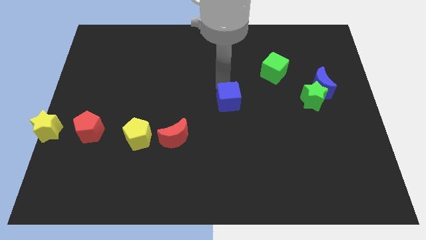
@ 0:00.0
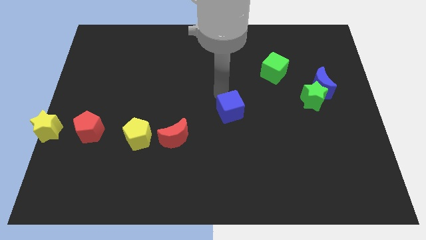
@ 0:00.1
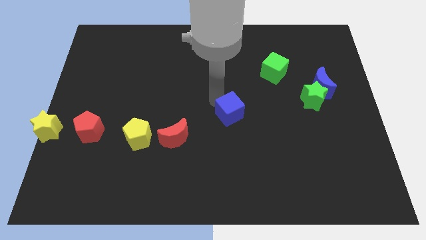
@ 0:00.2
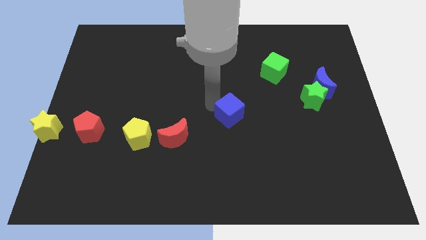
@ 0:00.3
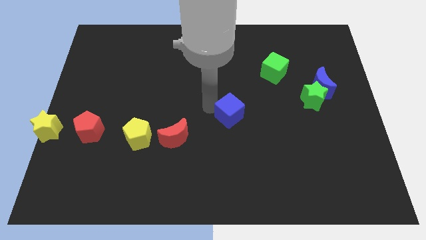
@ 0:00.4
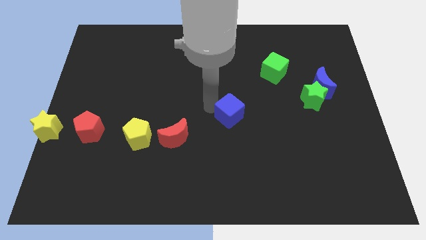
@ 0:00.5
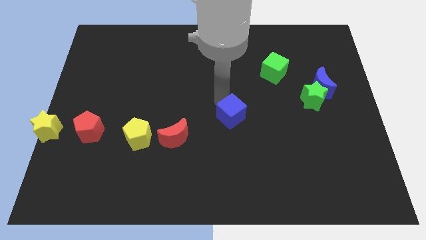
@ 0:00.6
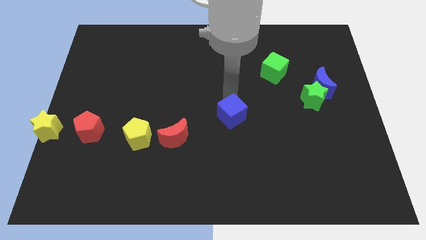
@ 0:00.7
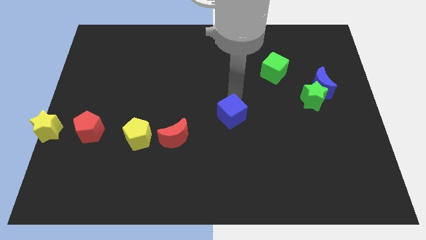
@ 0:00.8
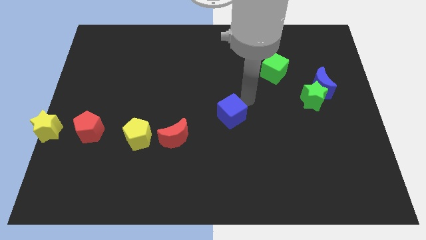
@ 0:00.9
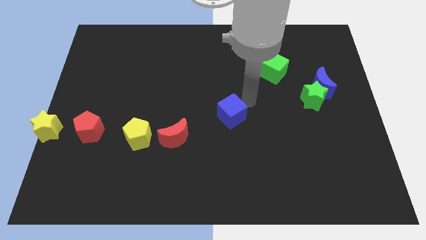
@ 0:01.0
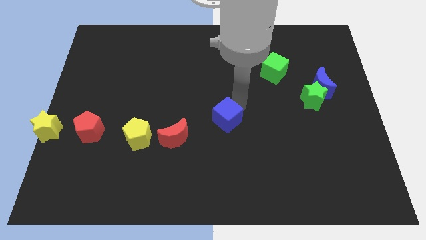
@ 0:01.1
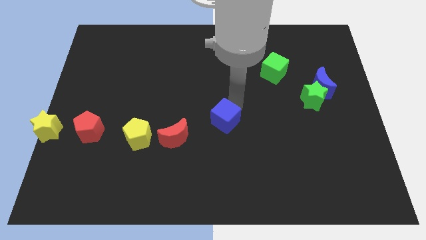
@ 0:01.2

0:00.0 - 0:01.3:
push blue cube slightly downwards

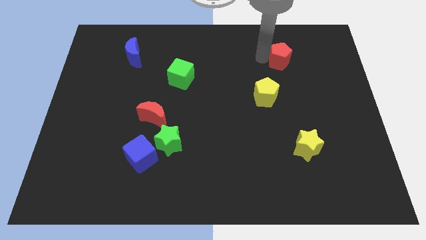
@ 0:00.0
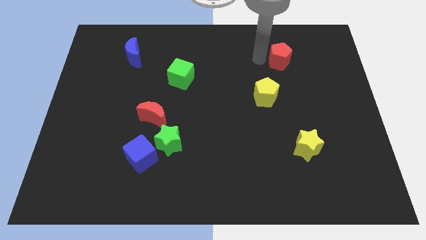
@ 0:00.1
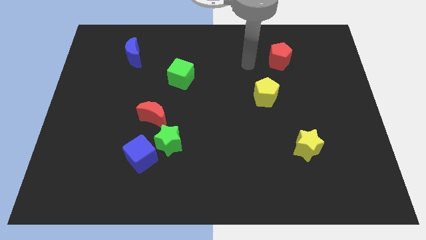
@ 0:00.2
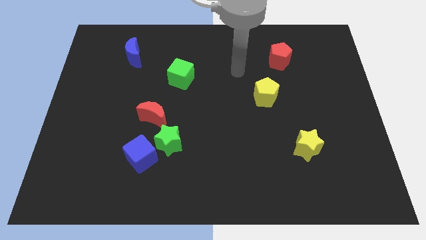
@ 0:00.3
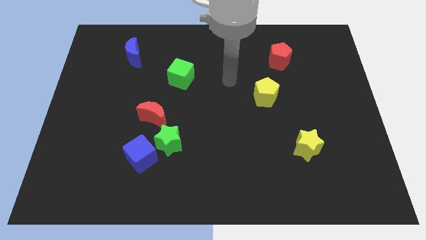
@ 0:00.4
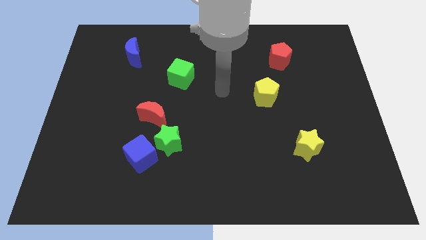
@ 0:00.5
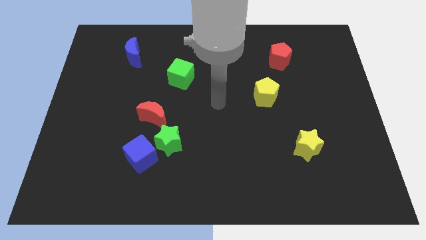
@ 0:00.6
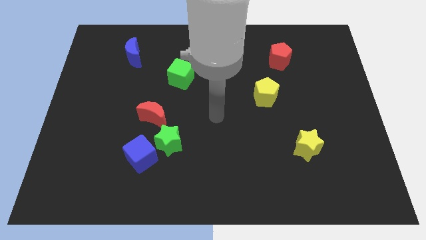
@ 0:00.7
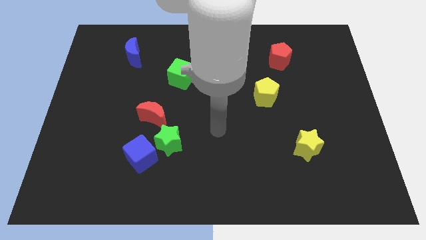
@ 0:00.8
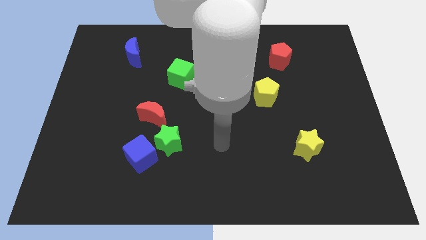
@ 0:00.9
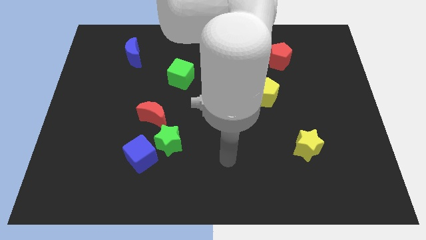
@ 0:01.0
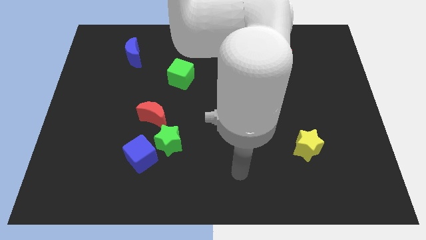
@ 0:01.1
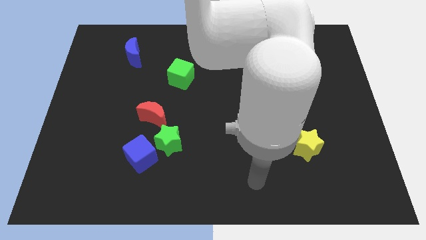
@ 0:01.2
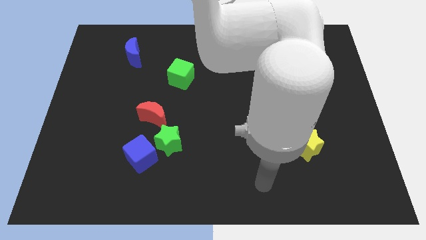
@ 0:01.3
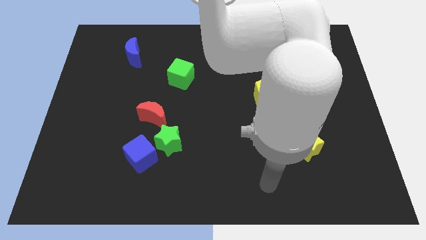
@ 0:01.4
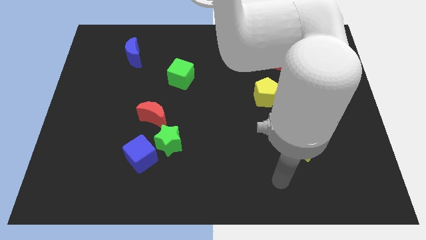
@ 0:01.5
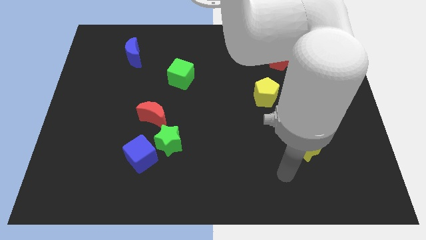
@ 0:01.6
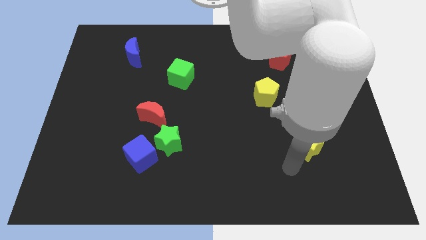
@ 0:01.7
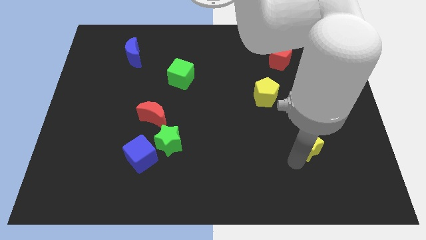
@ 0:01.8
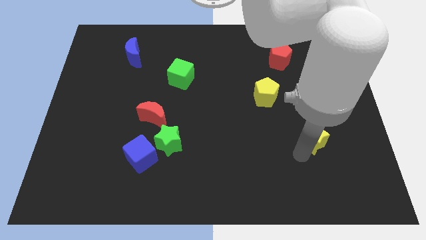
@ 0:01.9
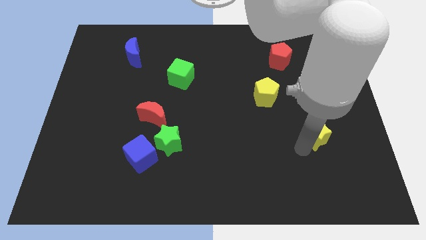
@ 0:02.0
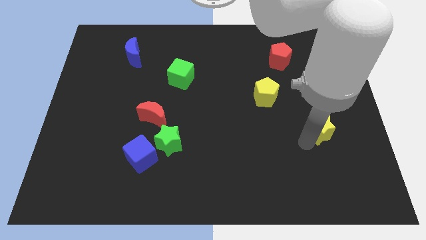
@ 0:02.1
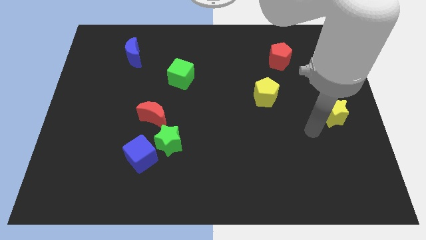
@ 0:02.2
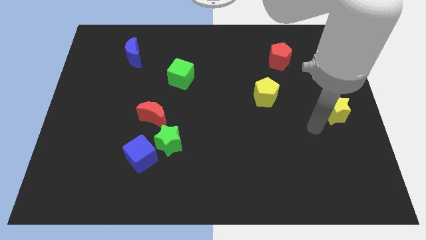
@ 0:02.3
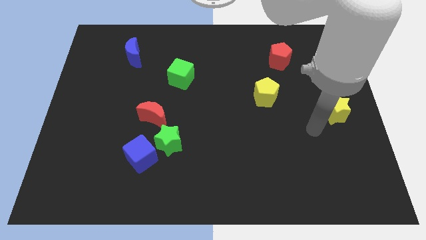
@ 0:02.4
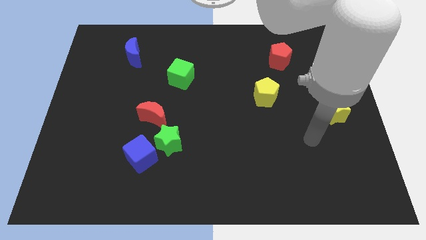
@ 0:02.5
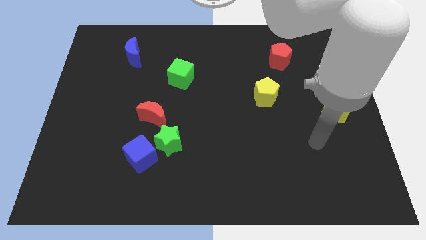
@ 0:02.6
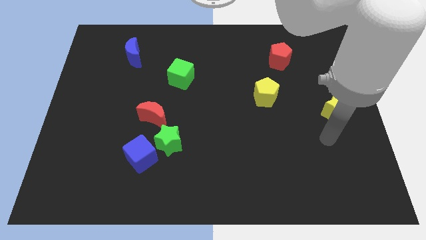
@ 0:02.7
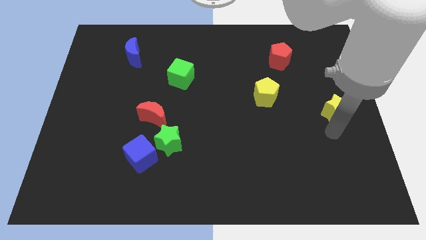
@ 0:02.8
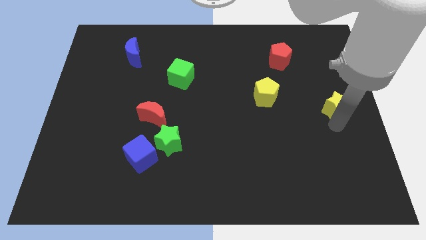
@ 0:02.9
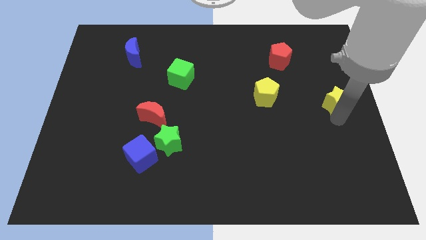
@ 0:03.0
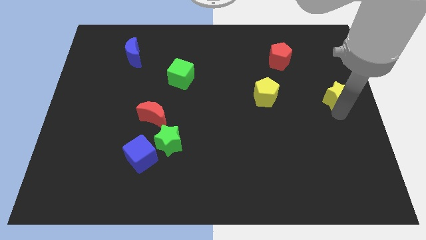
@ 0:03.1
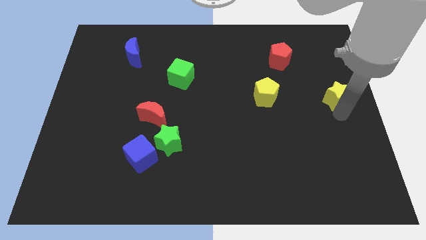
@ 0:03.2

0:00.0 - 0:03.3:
move your arm away from the red pentagon

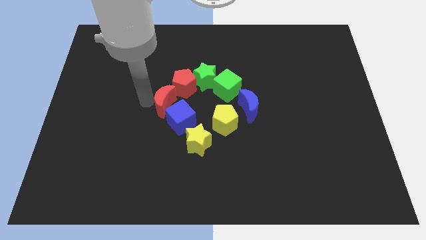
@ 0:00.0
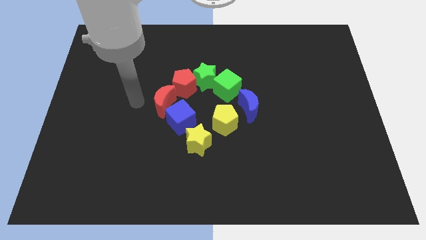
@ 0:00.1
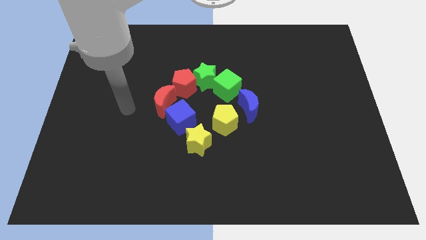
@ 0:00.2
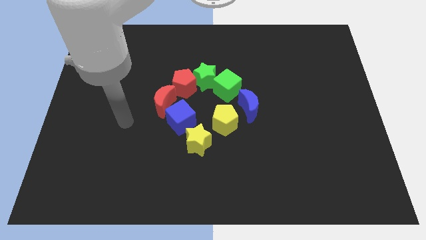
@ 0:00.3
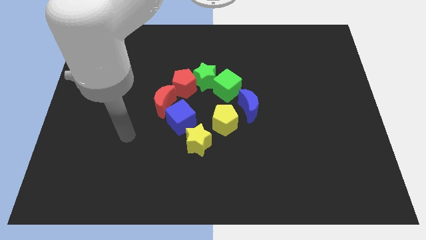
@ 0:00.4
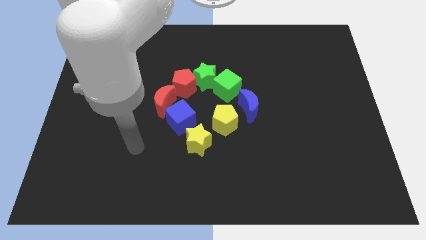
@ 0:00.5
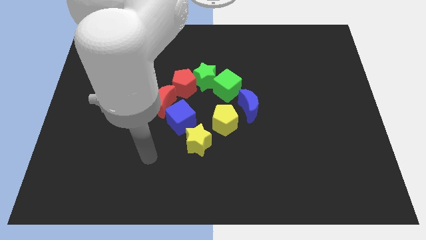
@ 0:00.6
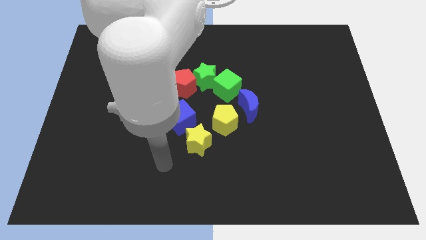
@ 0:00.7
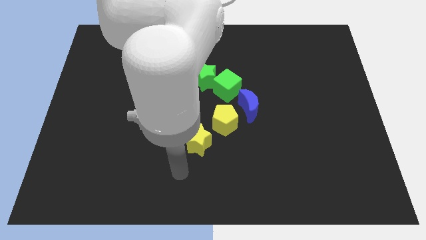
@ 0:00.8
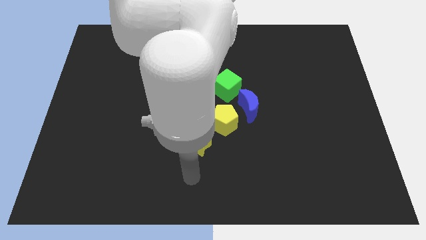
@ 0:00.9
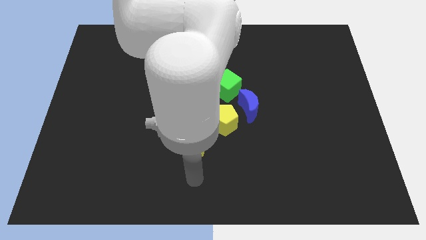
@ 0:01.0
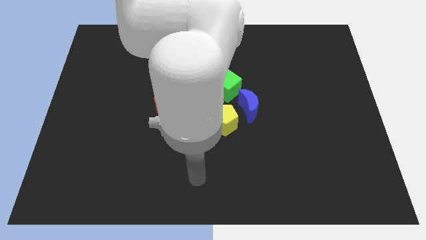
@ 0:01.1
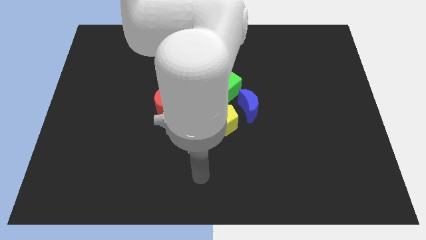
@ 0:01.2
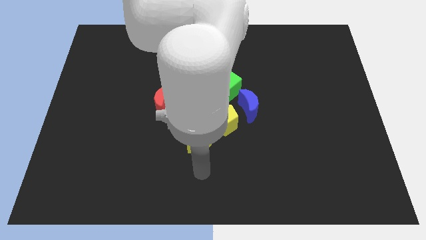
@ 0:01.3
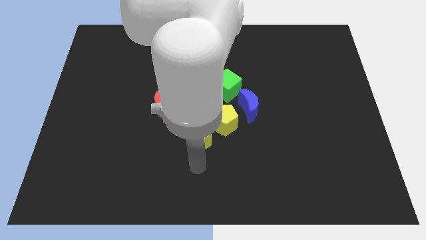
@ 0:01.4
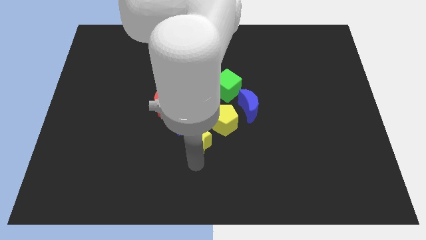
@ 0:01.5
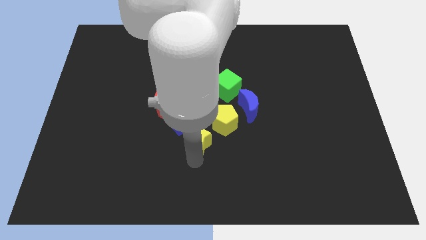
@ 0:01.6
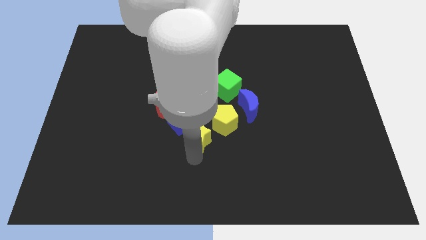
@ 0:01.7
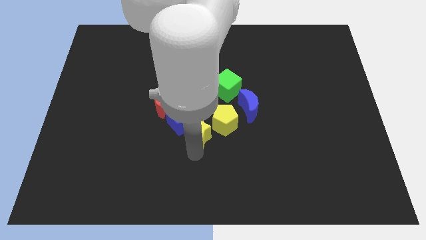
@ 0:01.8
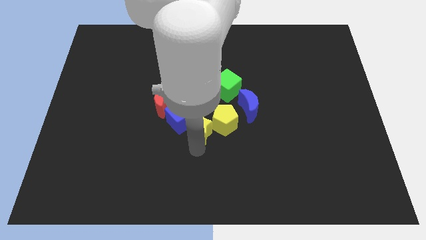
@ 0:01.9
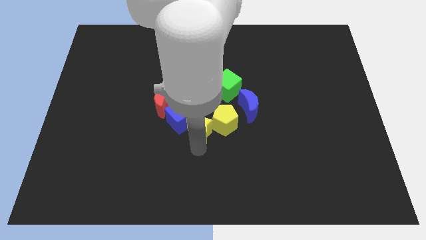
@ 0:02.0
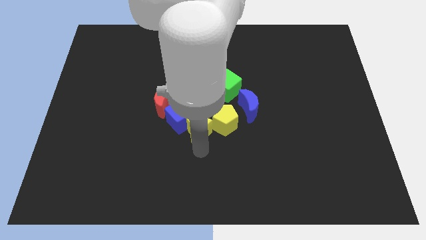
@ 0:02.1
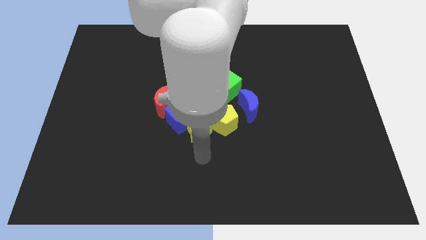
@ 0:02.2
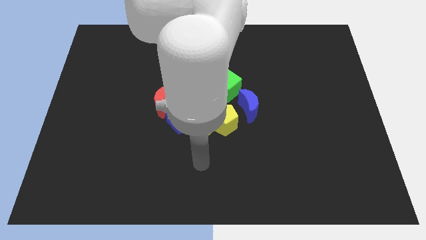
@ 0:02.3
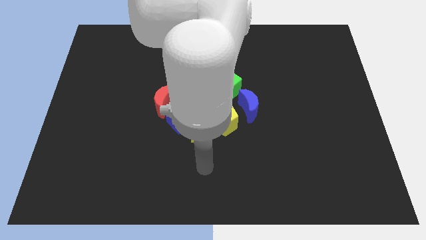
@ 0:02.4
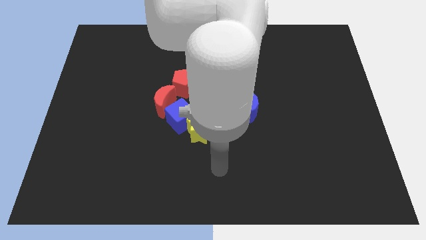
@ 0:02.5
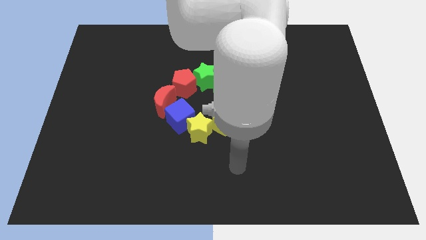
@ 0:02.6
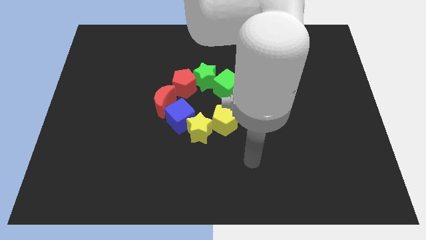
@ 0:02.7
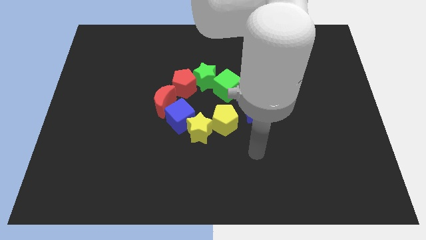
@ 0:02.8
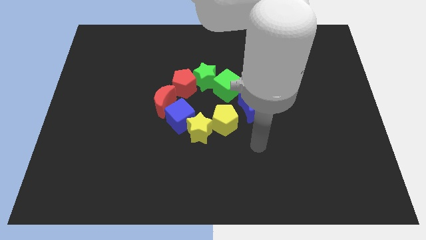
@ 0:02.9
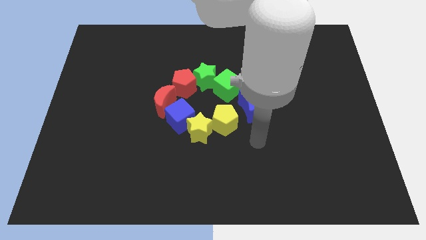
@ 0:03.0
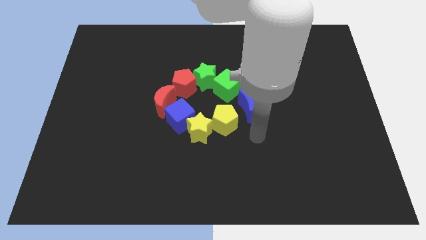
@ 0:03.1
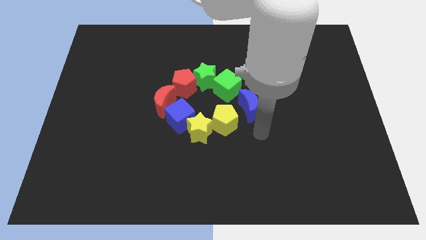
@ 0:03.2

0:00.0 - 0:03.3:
place the yellow star in between the yellow pentagon and the blue cube

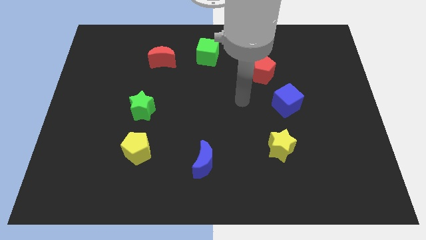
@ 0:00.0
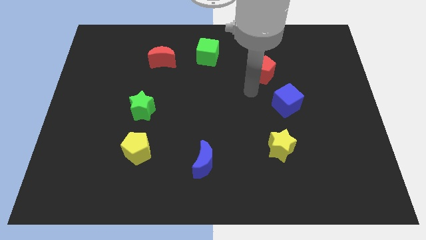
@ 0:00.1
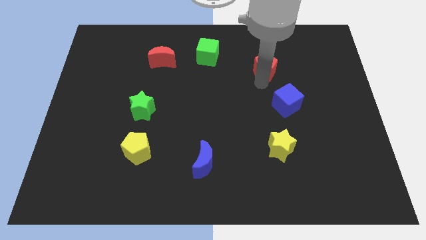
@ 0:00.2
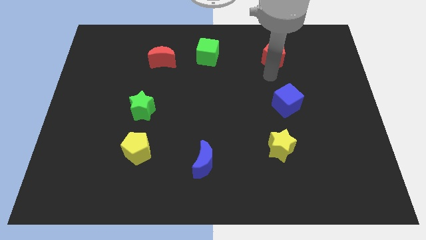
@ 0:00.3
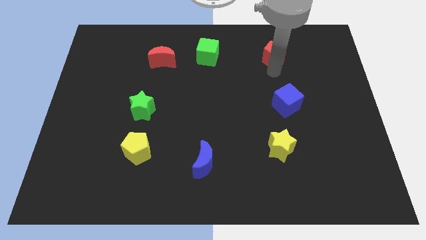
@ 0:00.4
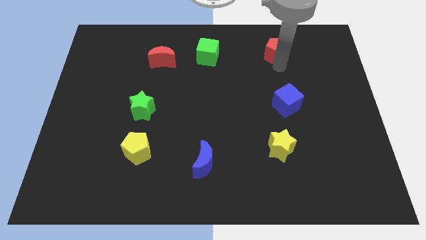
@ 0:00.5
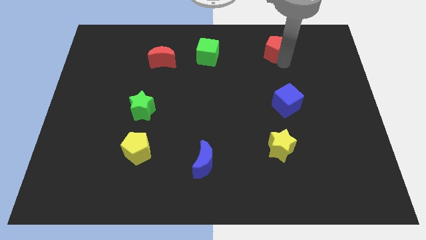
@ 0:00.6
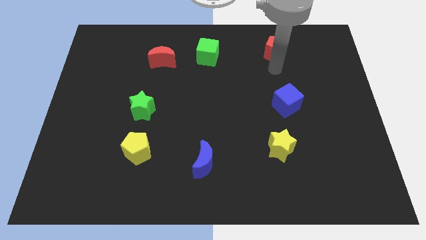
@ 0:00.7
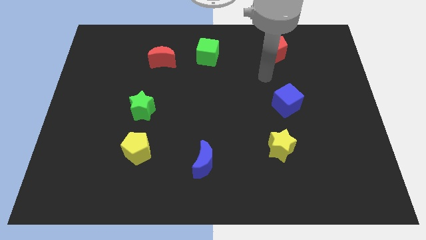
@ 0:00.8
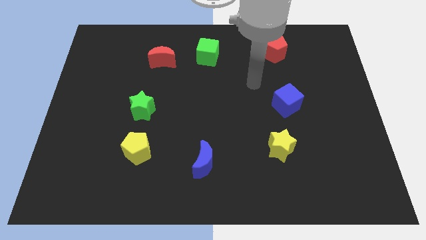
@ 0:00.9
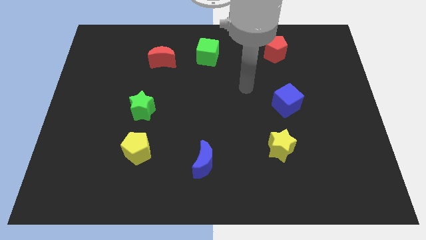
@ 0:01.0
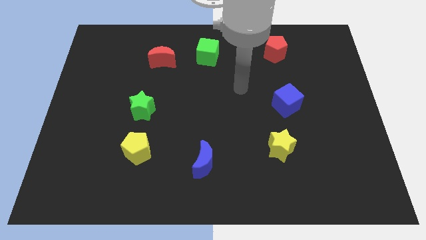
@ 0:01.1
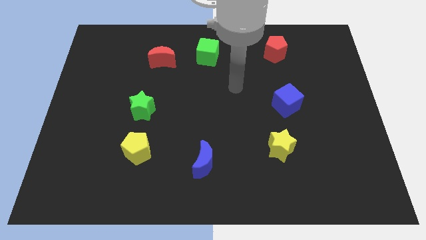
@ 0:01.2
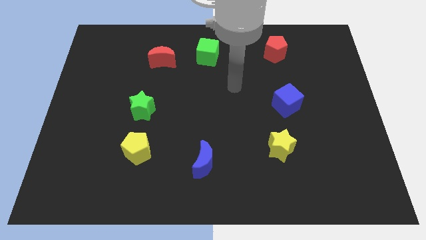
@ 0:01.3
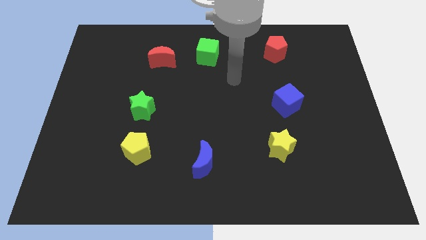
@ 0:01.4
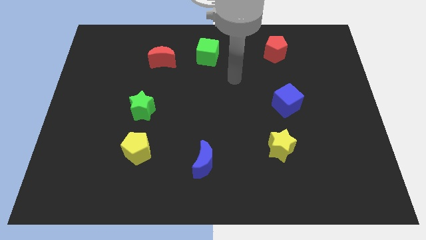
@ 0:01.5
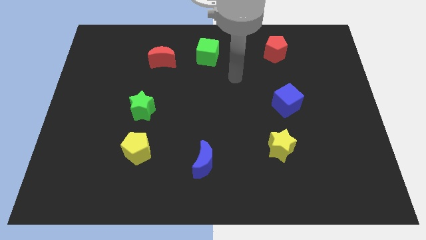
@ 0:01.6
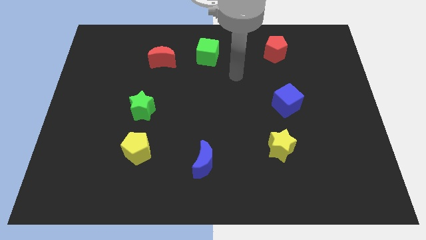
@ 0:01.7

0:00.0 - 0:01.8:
push the red pentagon slightly towards top right side
